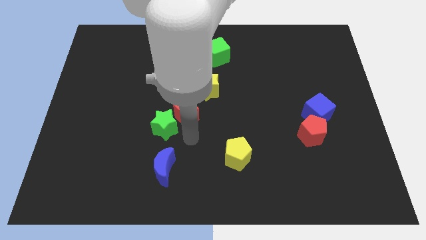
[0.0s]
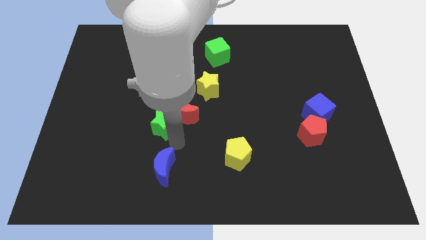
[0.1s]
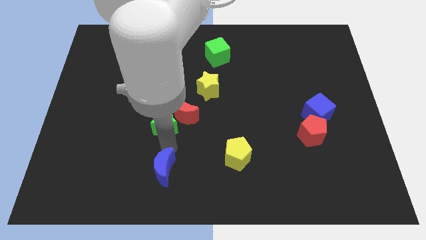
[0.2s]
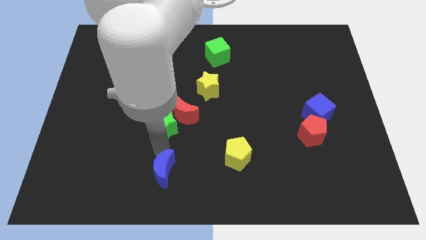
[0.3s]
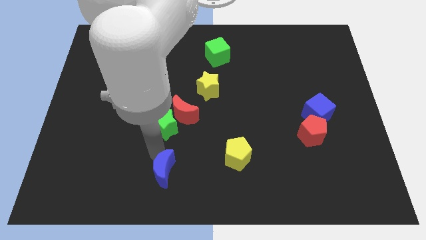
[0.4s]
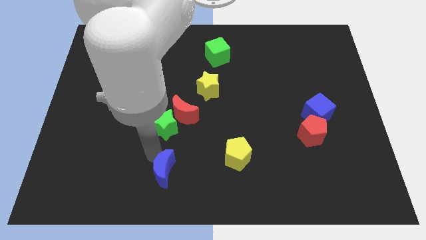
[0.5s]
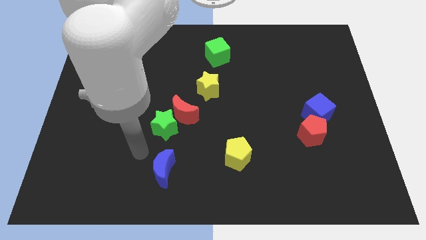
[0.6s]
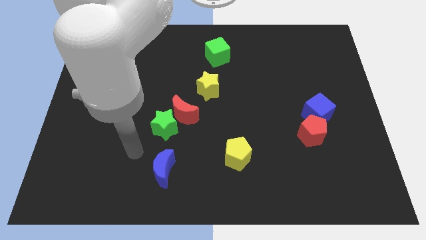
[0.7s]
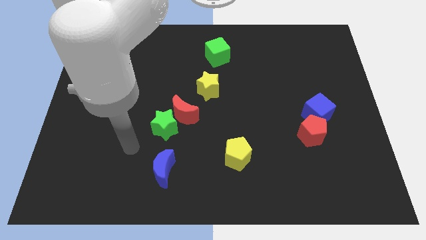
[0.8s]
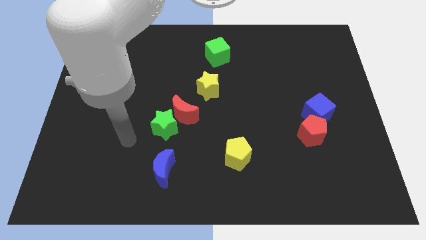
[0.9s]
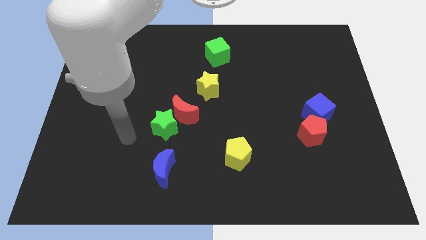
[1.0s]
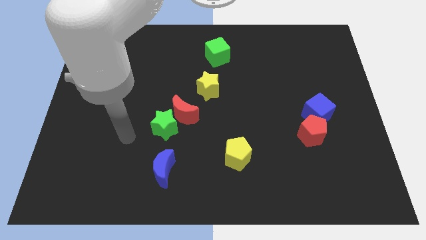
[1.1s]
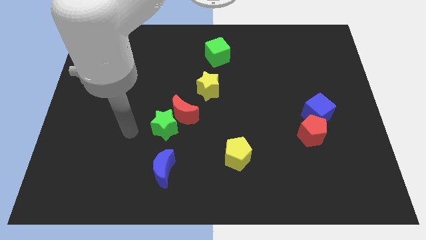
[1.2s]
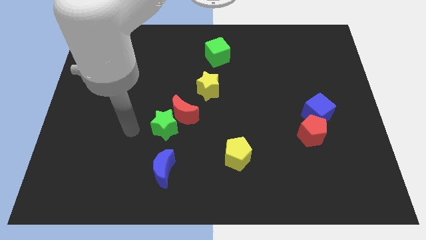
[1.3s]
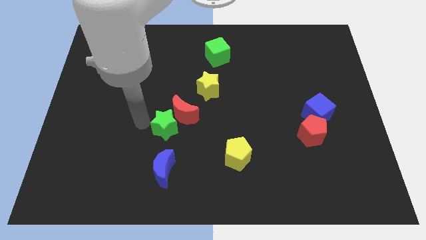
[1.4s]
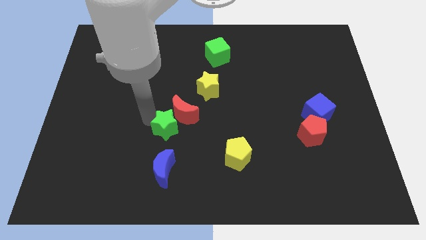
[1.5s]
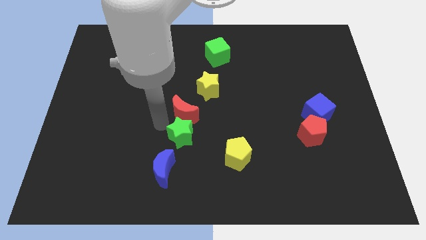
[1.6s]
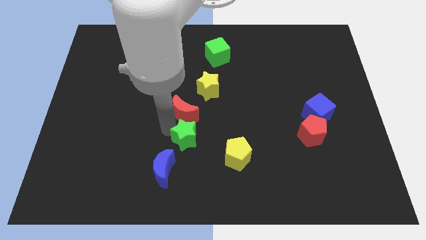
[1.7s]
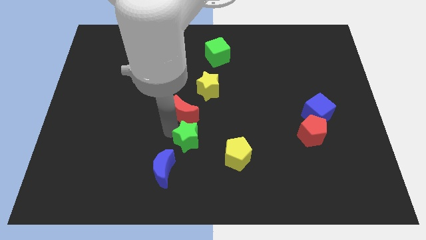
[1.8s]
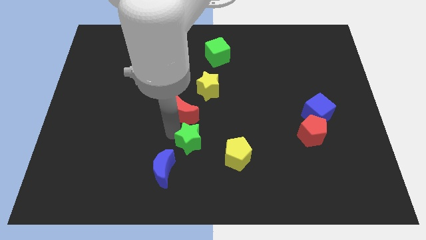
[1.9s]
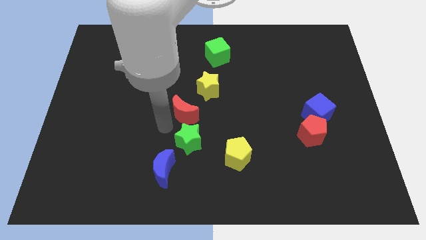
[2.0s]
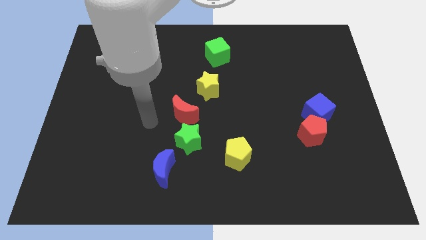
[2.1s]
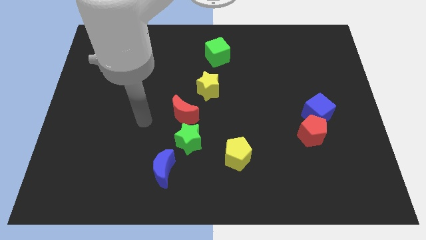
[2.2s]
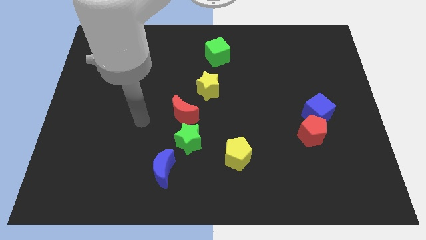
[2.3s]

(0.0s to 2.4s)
move the green star below the red crescent

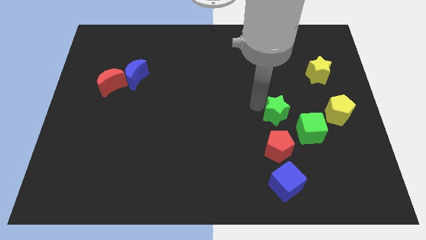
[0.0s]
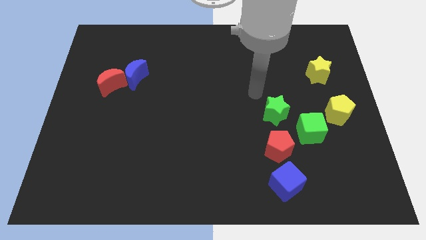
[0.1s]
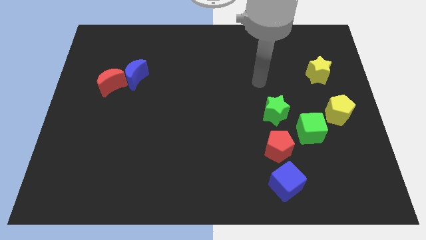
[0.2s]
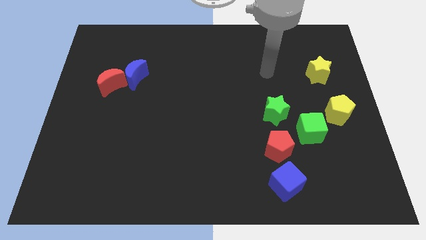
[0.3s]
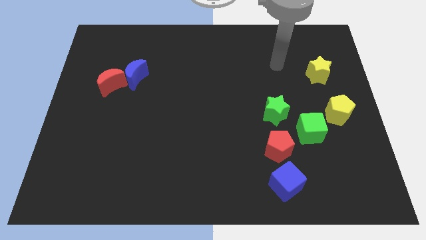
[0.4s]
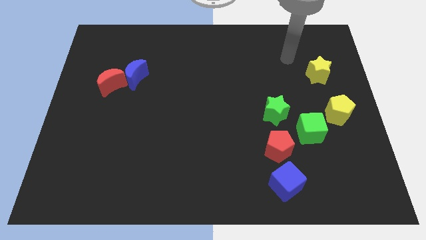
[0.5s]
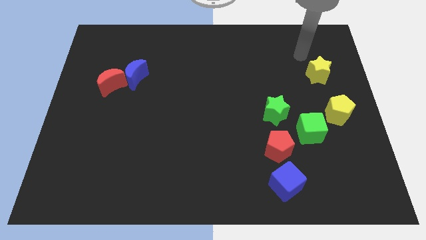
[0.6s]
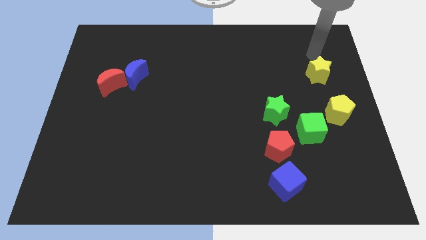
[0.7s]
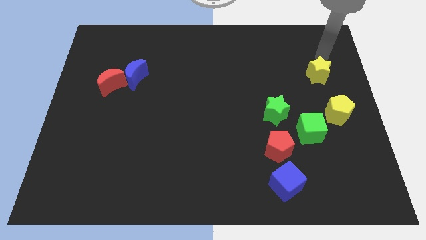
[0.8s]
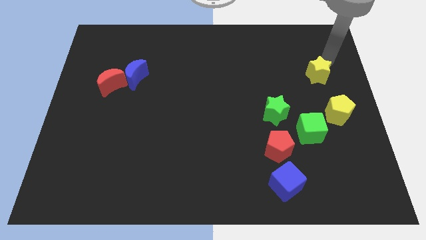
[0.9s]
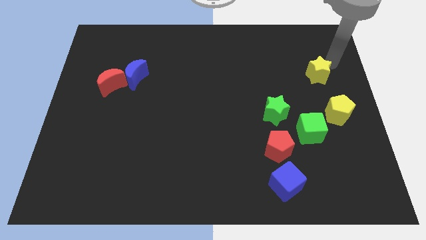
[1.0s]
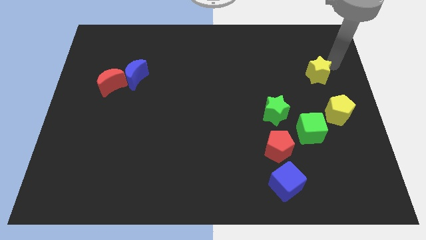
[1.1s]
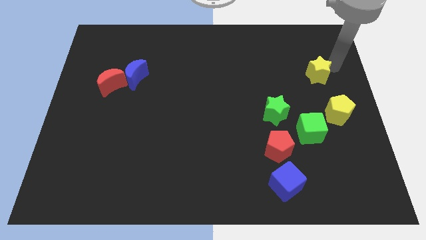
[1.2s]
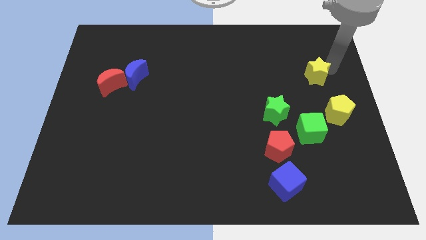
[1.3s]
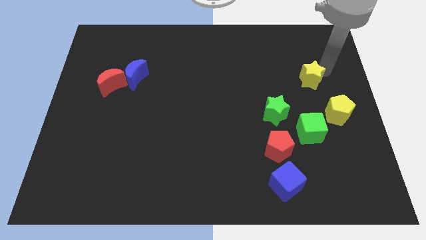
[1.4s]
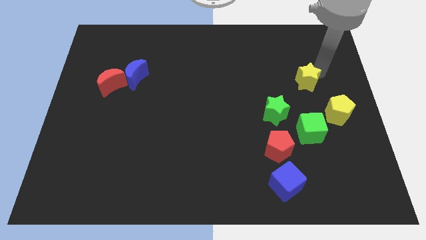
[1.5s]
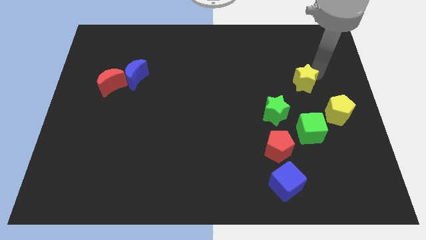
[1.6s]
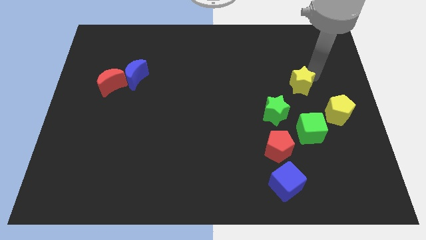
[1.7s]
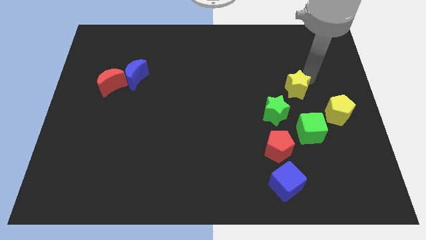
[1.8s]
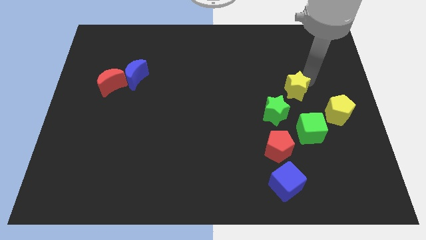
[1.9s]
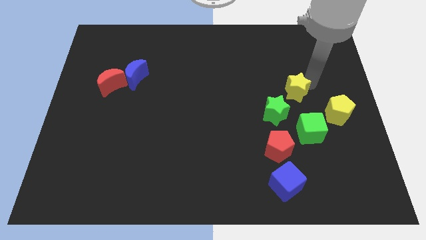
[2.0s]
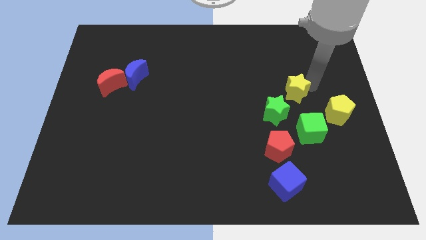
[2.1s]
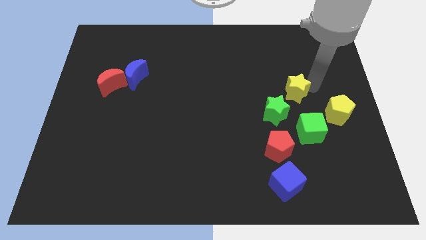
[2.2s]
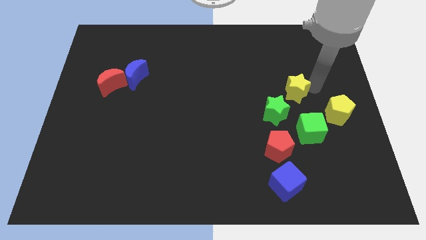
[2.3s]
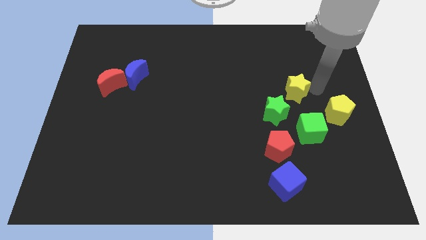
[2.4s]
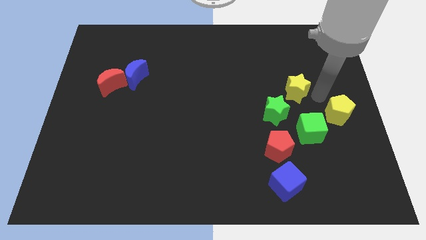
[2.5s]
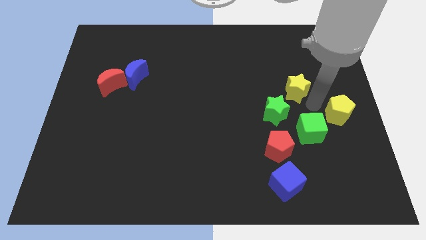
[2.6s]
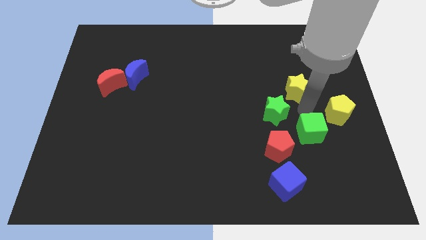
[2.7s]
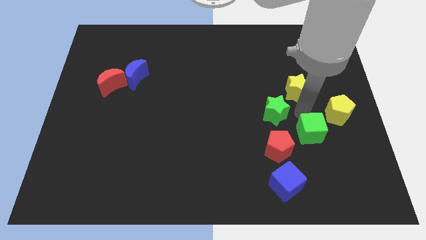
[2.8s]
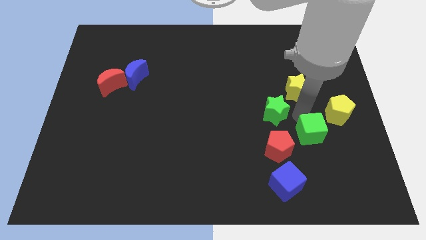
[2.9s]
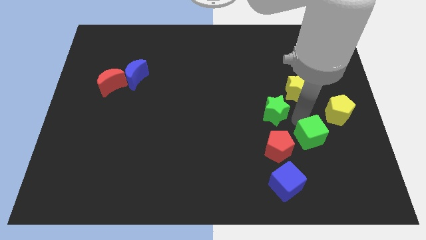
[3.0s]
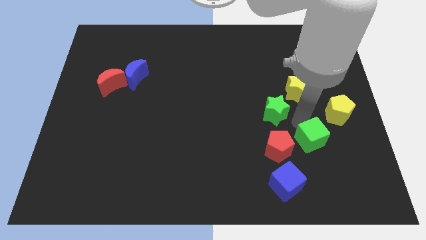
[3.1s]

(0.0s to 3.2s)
push the yellow star slightly towards the green star

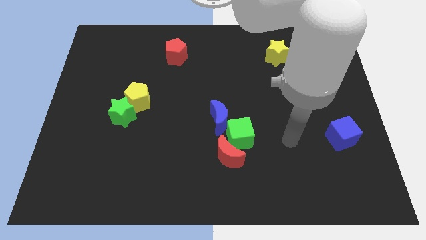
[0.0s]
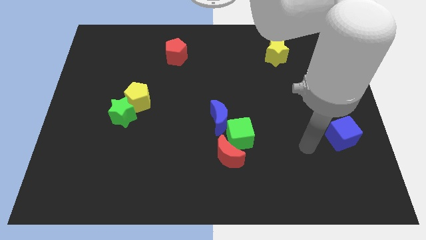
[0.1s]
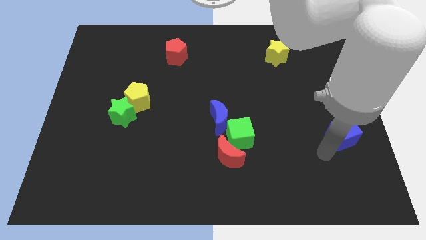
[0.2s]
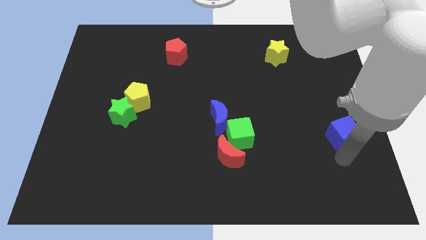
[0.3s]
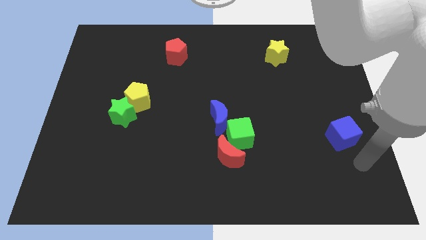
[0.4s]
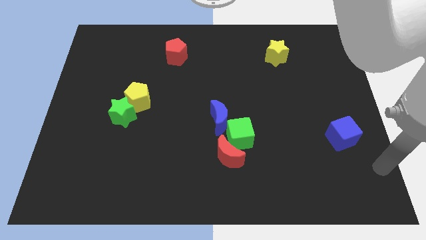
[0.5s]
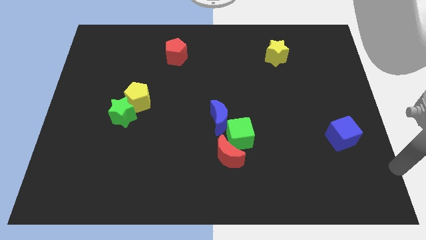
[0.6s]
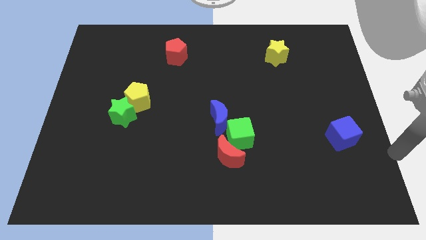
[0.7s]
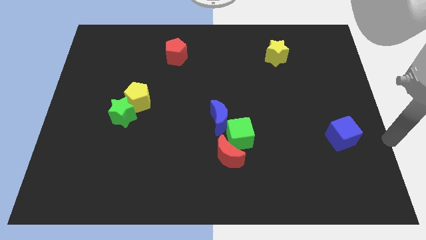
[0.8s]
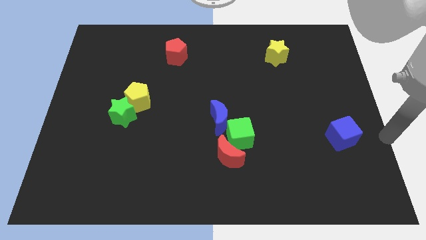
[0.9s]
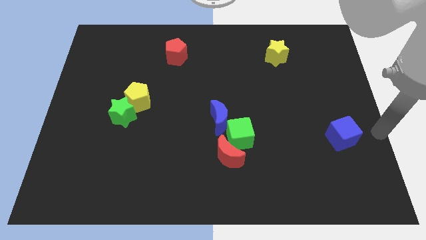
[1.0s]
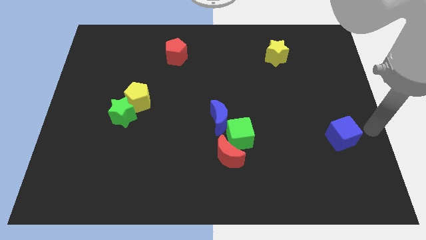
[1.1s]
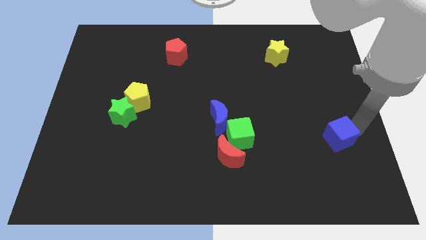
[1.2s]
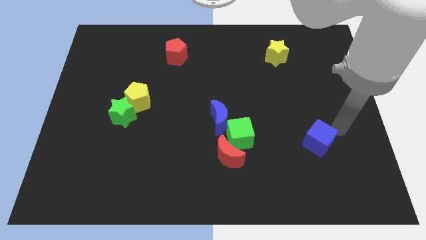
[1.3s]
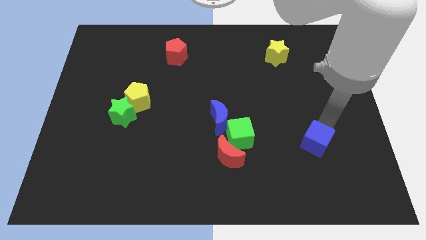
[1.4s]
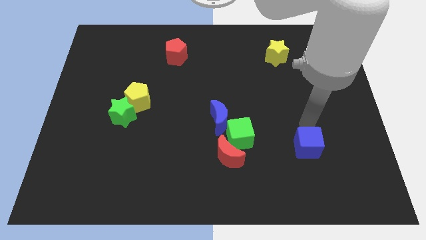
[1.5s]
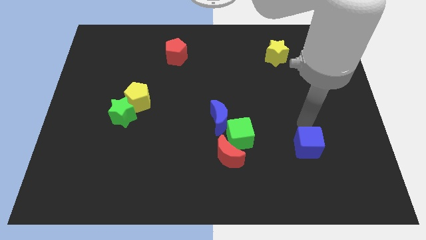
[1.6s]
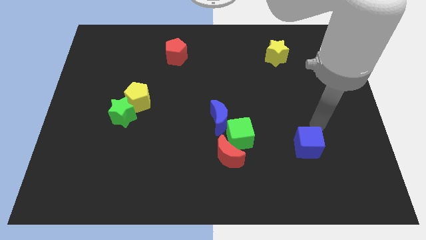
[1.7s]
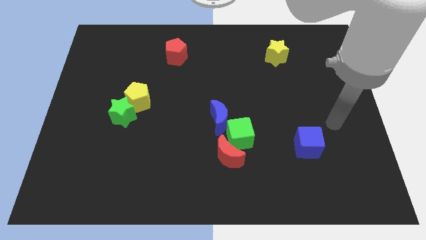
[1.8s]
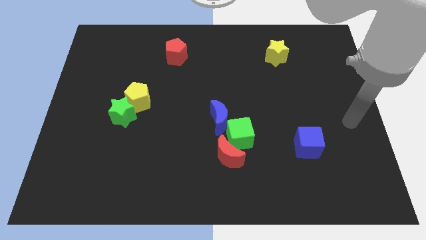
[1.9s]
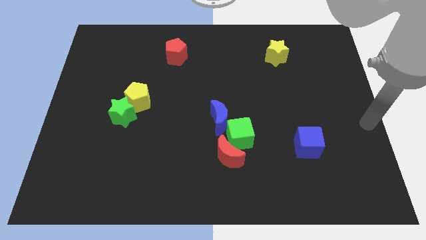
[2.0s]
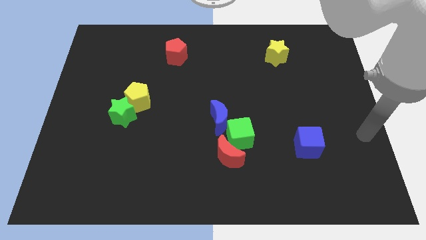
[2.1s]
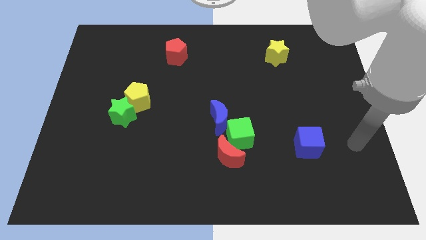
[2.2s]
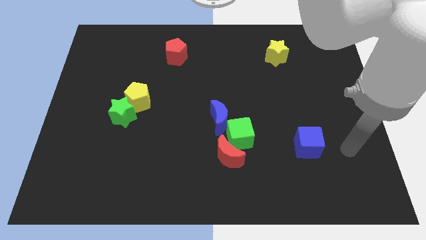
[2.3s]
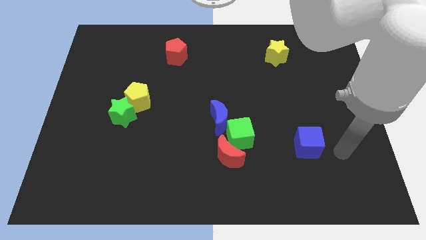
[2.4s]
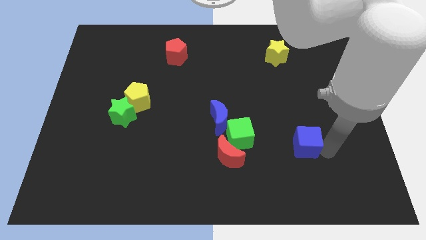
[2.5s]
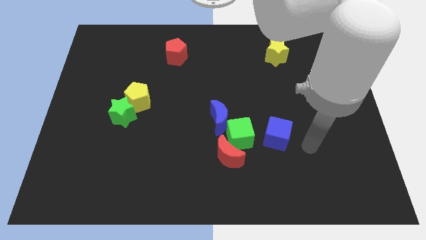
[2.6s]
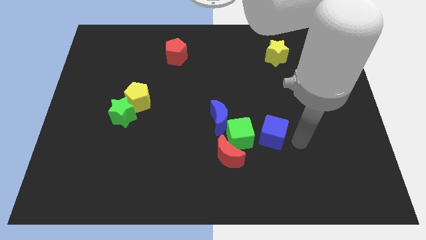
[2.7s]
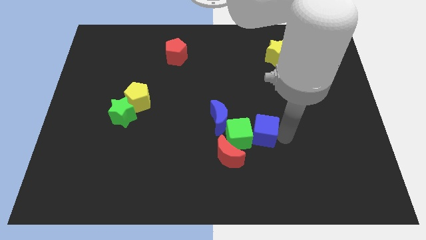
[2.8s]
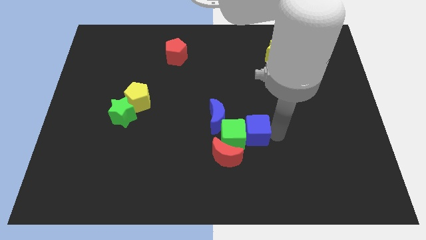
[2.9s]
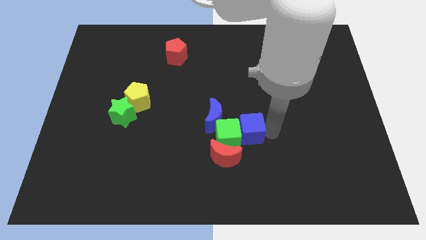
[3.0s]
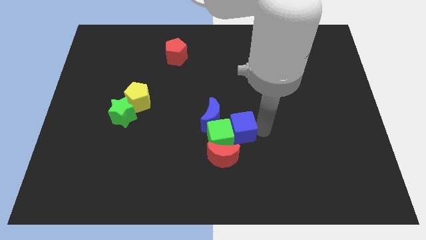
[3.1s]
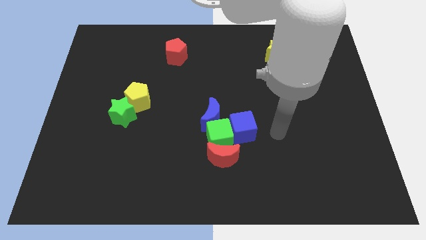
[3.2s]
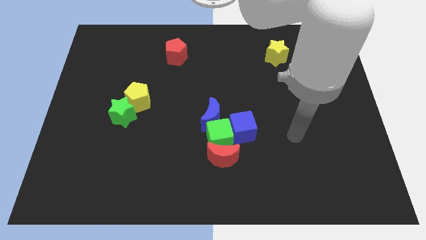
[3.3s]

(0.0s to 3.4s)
push the blue cube into the group of blocks

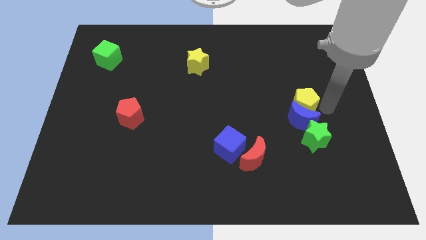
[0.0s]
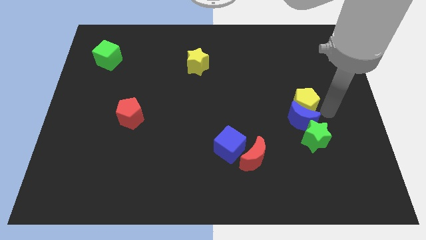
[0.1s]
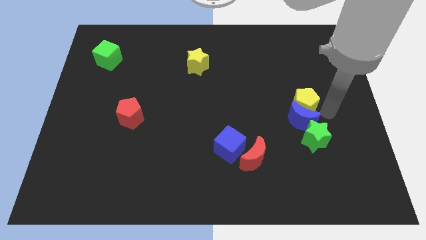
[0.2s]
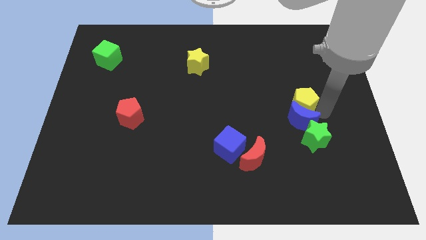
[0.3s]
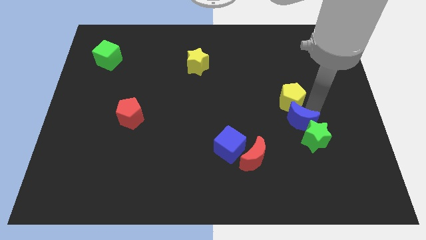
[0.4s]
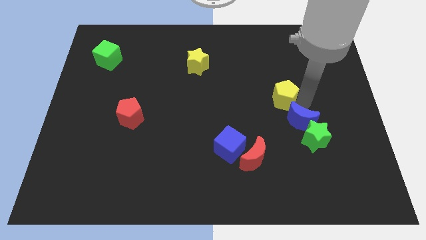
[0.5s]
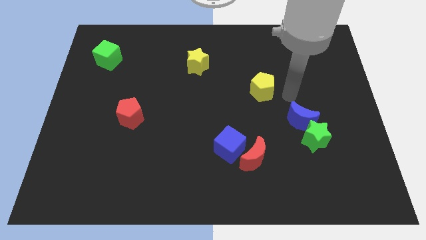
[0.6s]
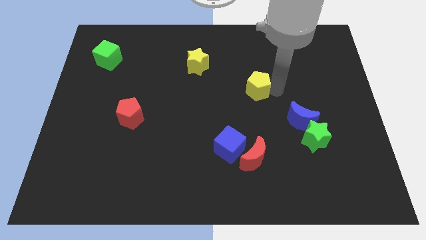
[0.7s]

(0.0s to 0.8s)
separate yellow pentagon from blue moon
